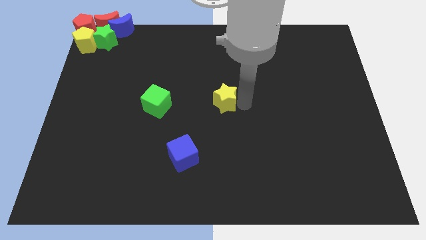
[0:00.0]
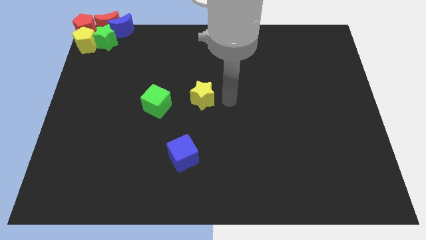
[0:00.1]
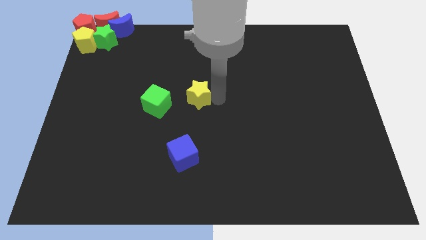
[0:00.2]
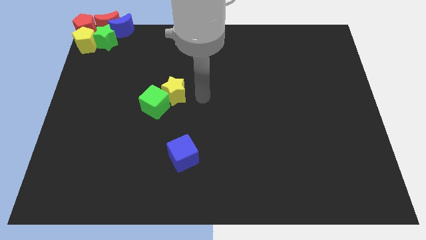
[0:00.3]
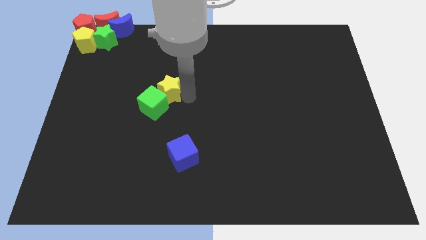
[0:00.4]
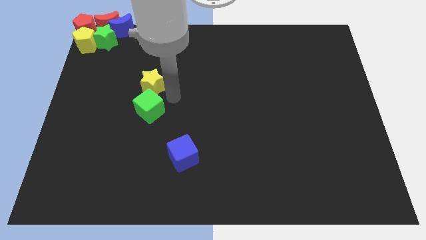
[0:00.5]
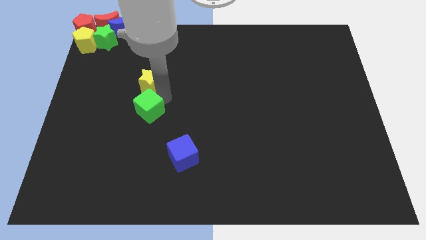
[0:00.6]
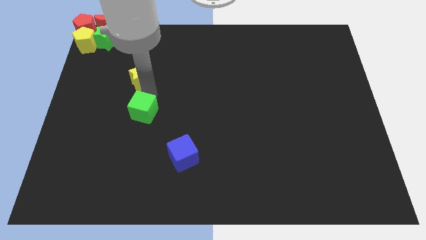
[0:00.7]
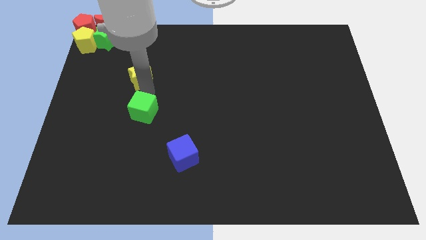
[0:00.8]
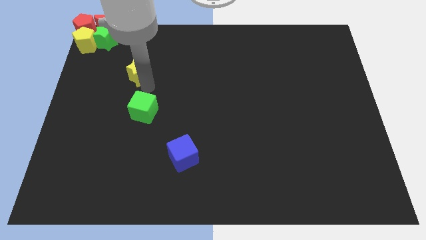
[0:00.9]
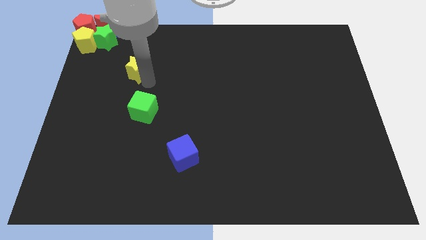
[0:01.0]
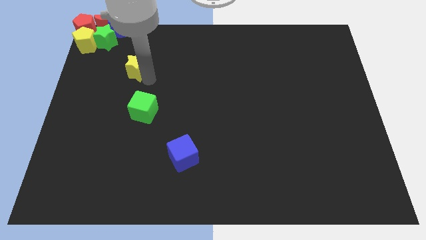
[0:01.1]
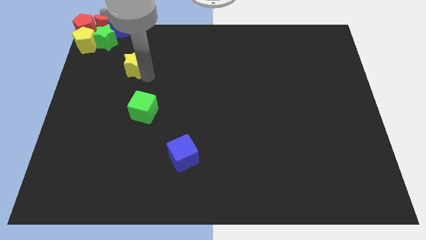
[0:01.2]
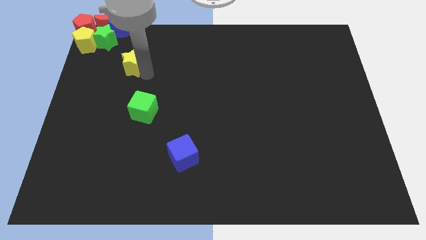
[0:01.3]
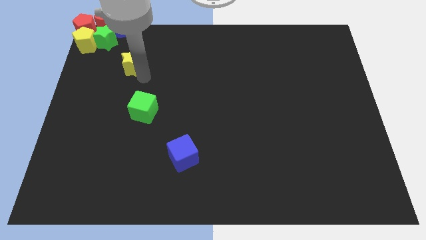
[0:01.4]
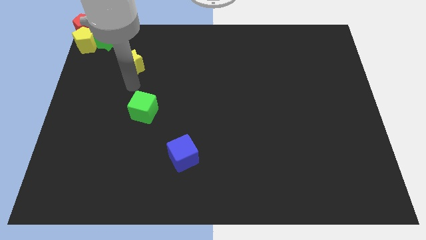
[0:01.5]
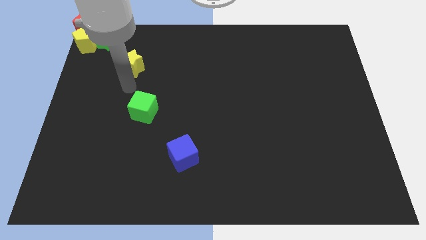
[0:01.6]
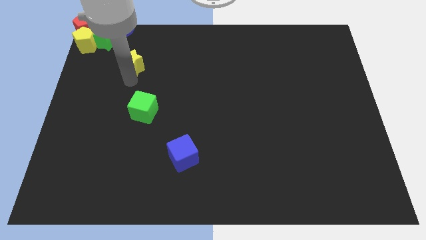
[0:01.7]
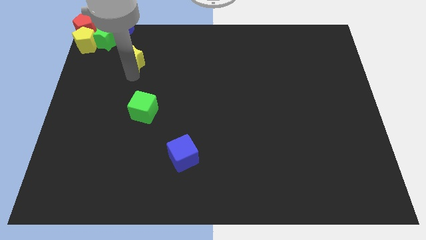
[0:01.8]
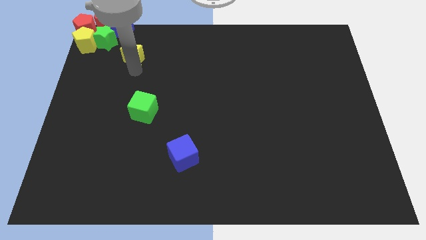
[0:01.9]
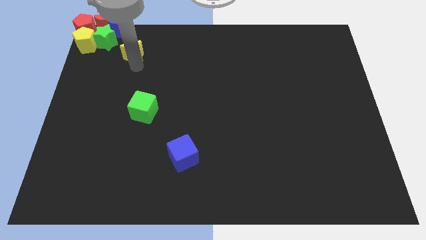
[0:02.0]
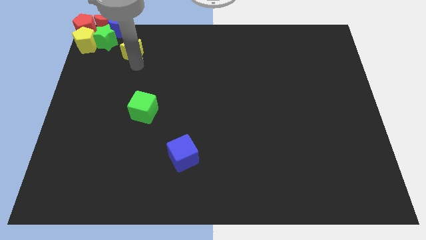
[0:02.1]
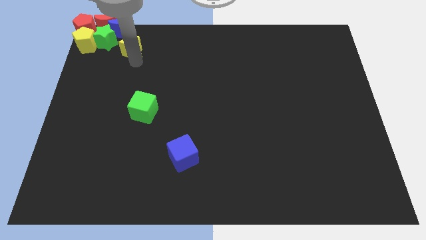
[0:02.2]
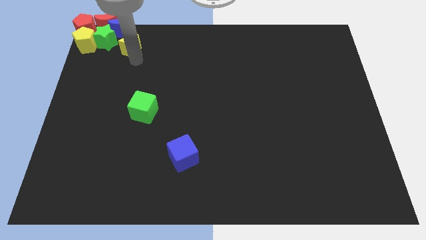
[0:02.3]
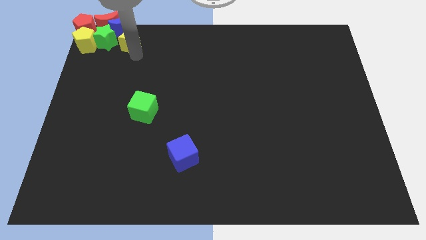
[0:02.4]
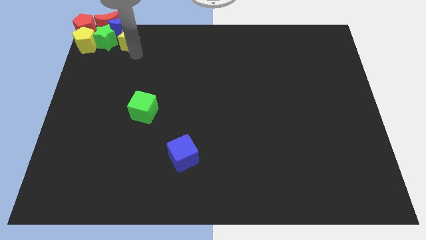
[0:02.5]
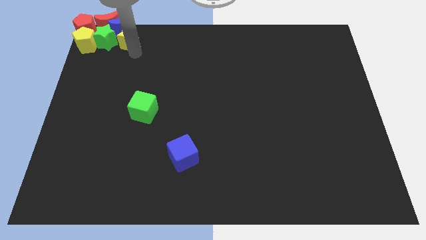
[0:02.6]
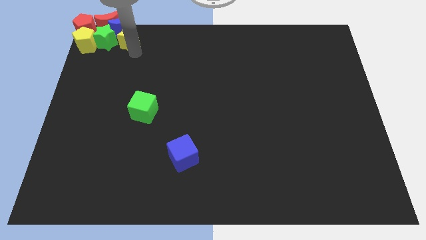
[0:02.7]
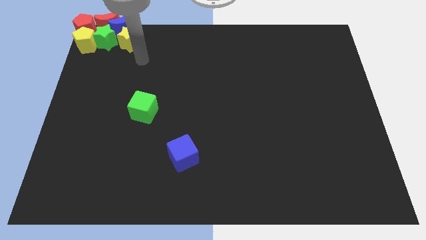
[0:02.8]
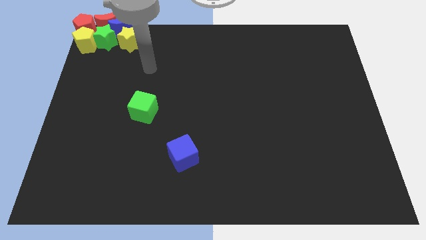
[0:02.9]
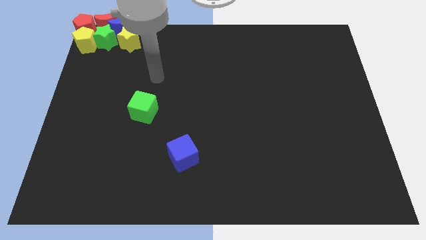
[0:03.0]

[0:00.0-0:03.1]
move the yellow star into the group of blocks

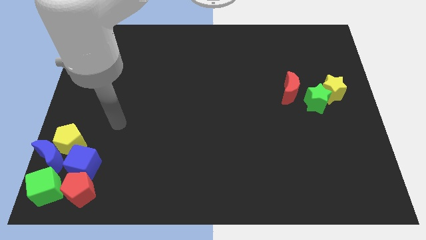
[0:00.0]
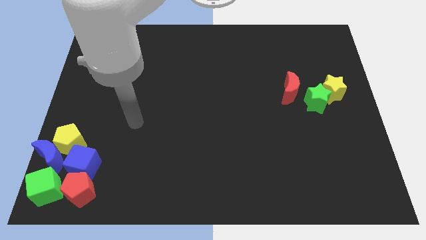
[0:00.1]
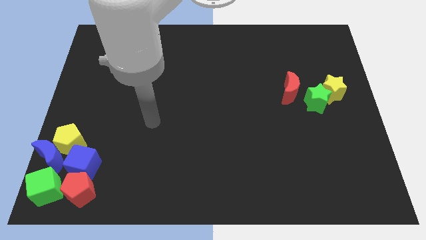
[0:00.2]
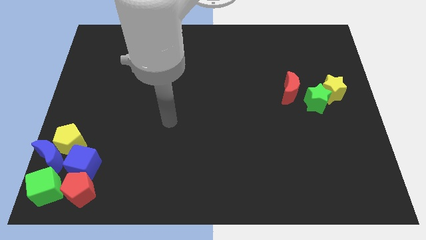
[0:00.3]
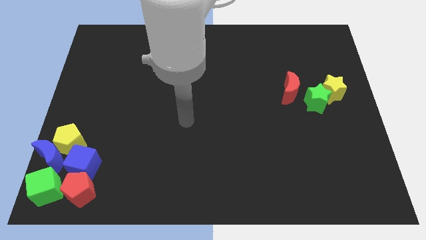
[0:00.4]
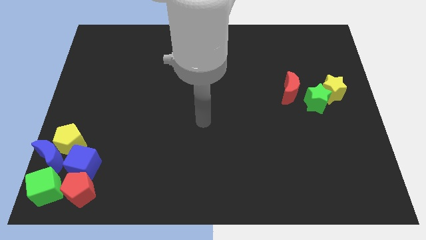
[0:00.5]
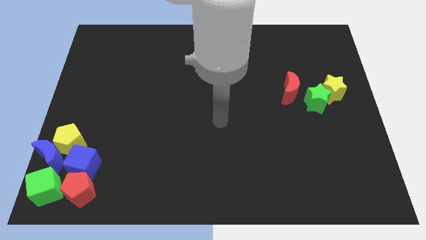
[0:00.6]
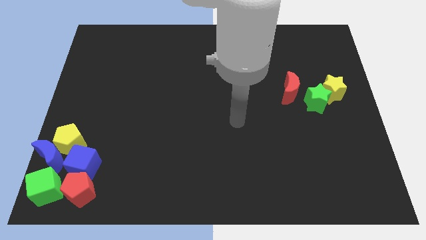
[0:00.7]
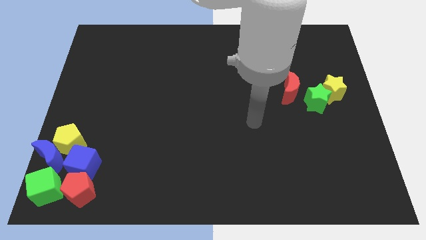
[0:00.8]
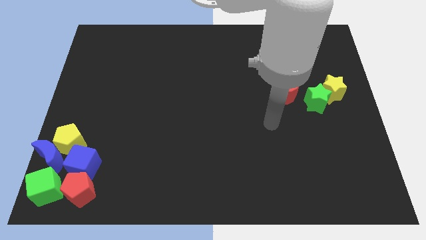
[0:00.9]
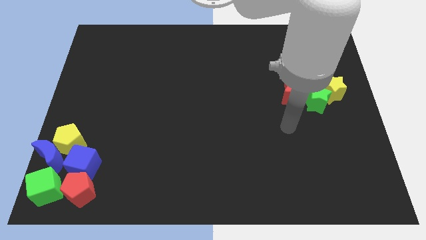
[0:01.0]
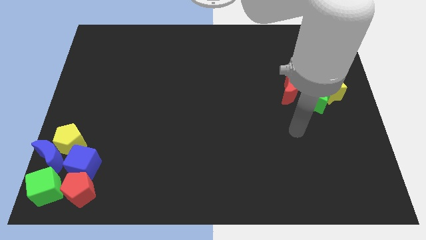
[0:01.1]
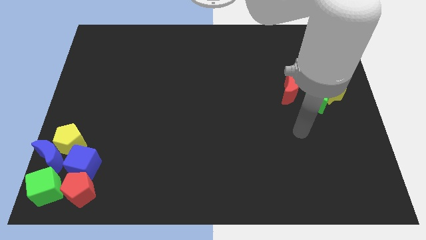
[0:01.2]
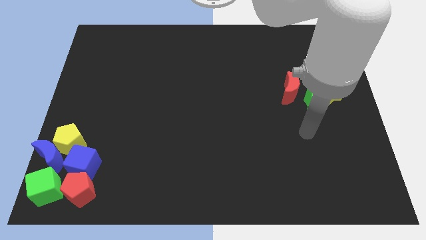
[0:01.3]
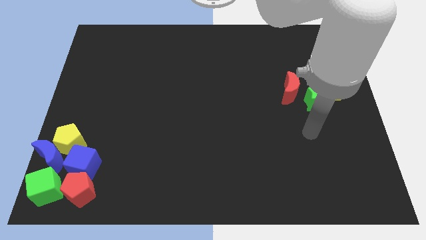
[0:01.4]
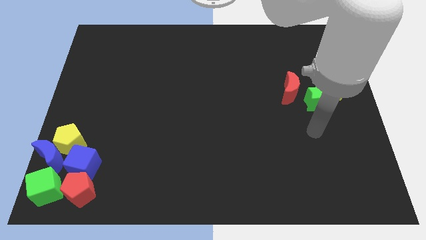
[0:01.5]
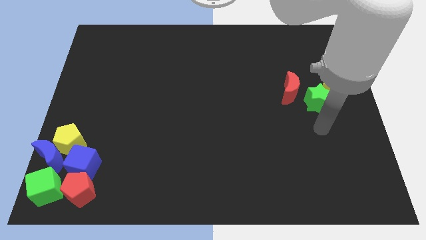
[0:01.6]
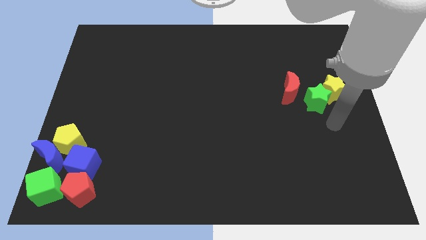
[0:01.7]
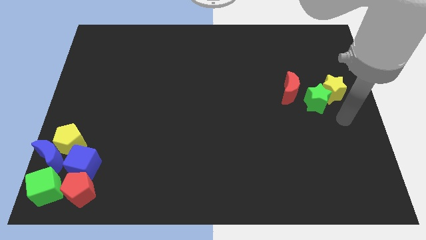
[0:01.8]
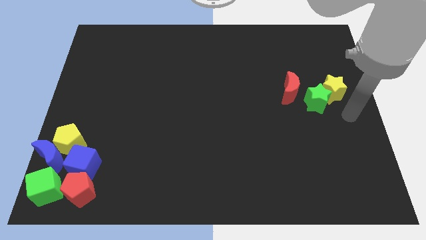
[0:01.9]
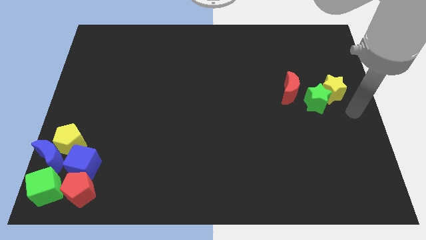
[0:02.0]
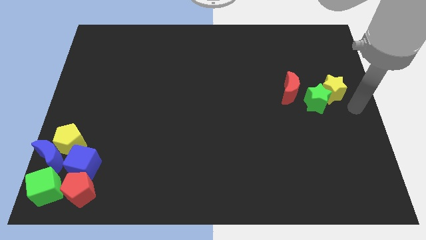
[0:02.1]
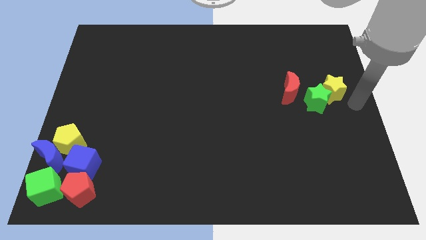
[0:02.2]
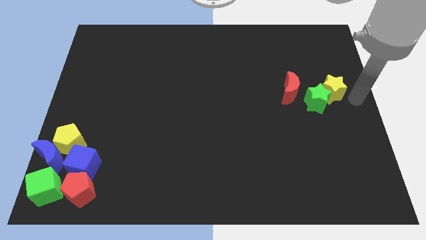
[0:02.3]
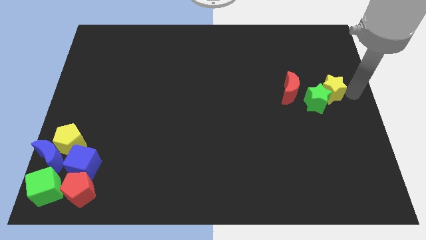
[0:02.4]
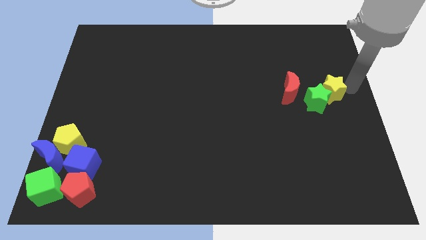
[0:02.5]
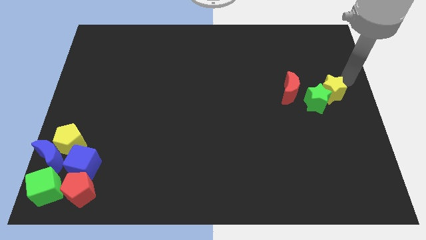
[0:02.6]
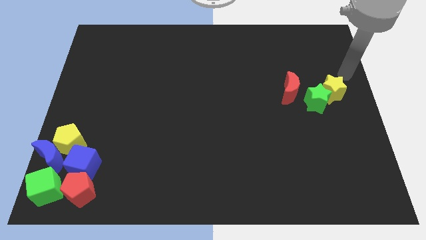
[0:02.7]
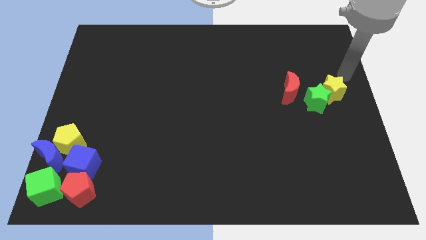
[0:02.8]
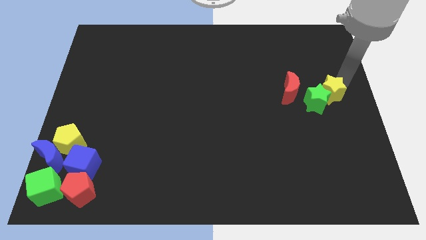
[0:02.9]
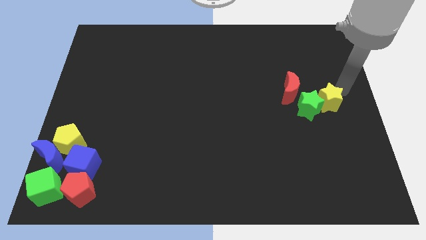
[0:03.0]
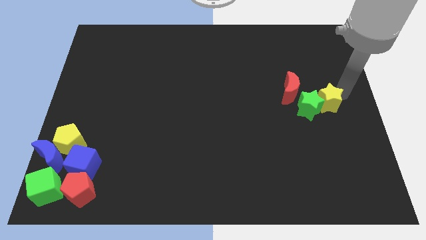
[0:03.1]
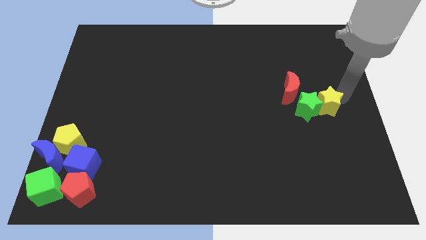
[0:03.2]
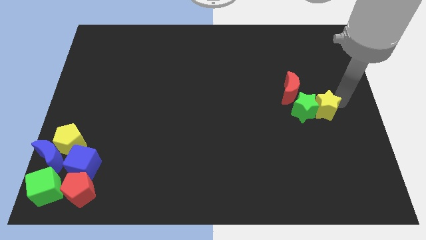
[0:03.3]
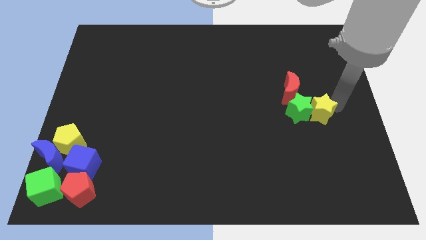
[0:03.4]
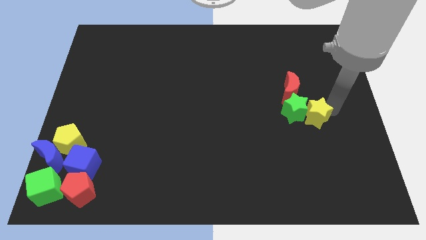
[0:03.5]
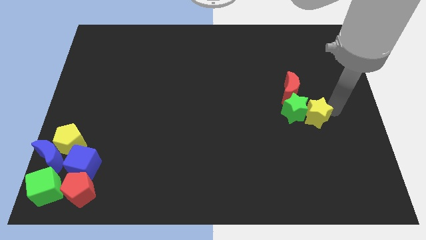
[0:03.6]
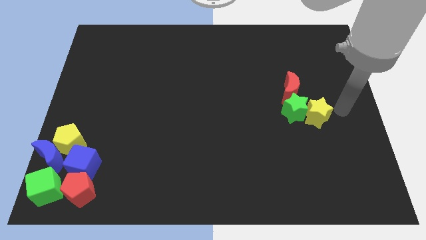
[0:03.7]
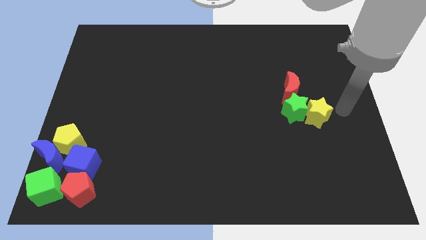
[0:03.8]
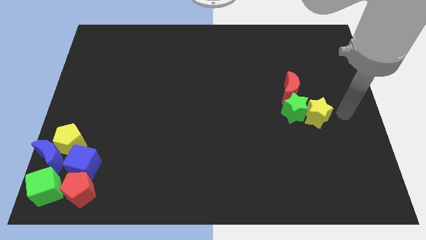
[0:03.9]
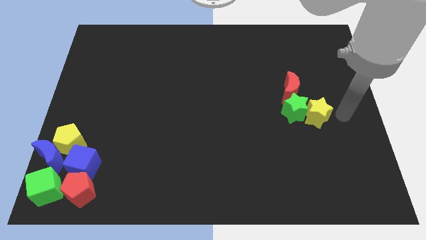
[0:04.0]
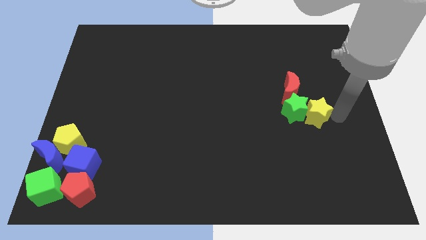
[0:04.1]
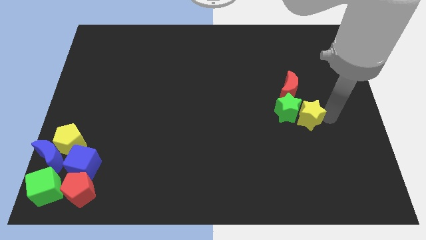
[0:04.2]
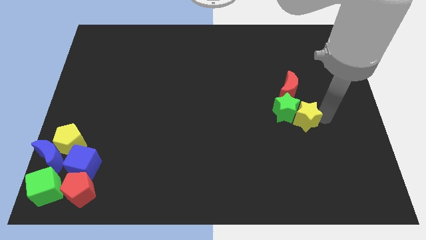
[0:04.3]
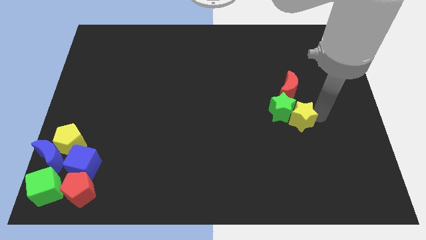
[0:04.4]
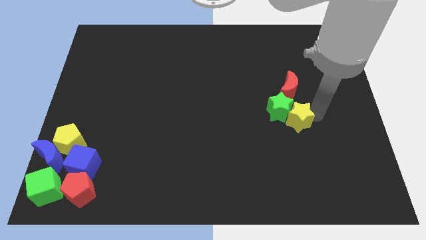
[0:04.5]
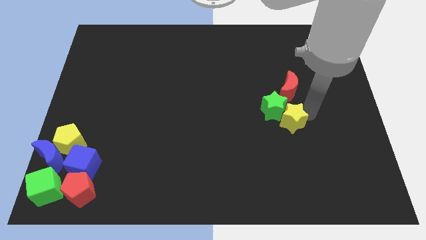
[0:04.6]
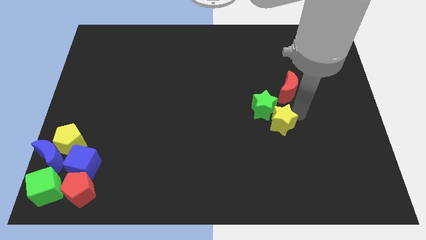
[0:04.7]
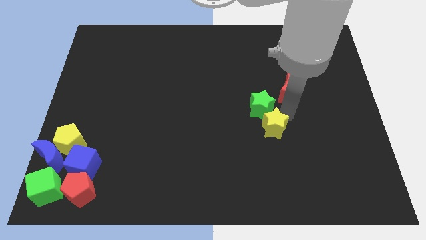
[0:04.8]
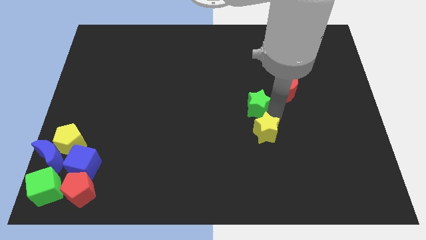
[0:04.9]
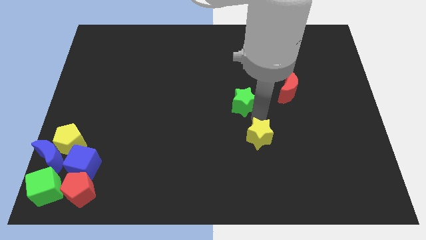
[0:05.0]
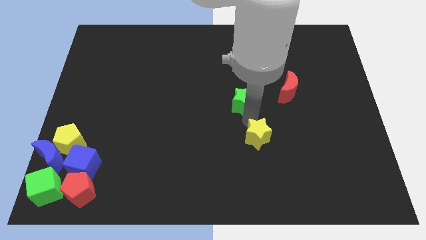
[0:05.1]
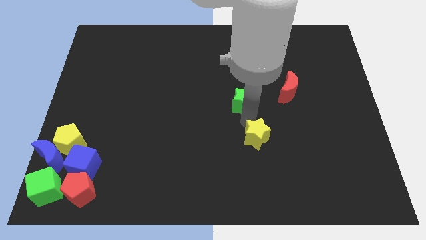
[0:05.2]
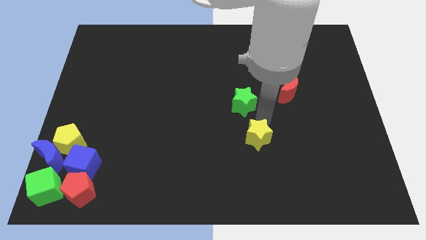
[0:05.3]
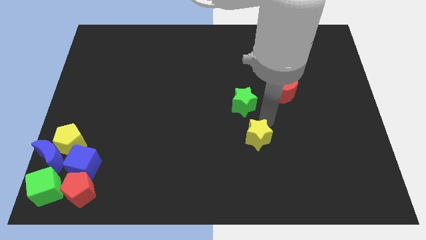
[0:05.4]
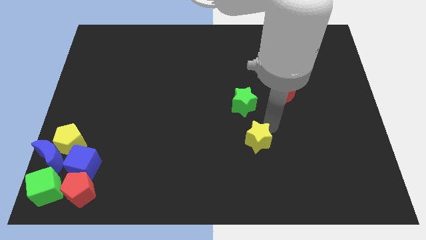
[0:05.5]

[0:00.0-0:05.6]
separate the yellow star and green star

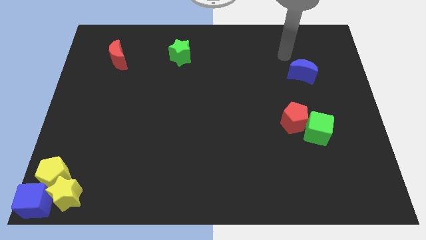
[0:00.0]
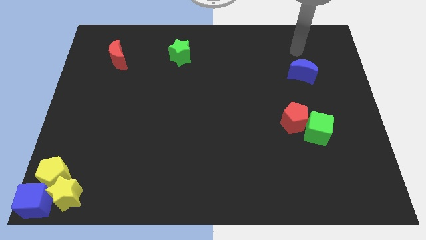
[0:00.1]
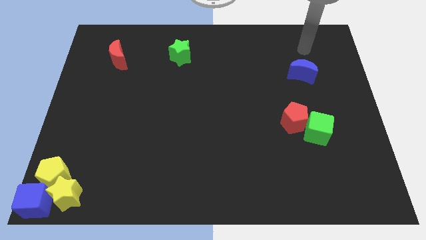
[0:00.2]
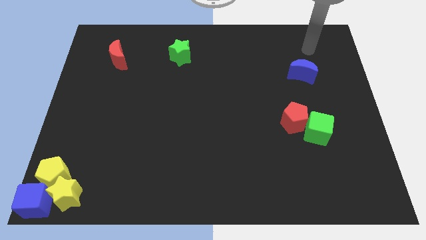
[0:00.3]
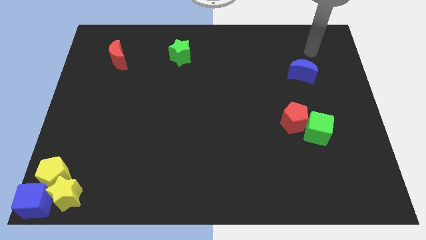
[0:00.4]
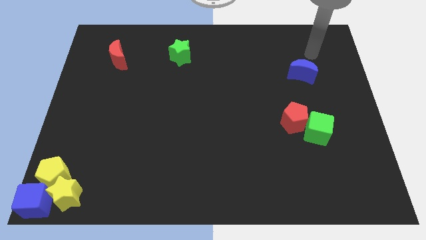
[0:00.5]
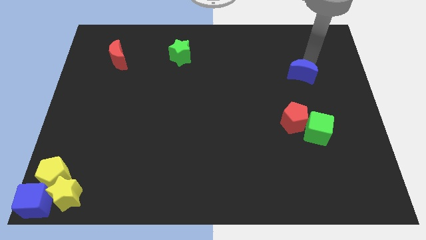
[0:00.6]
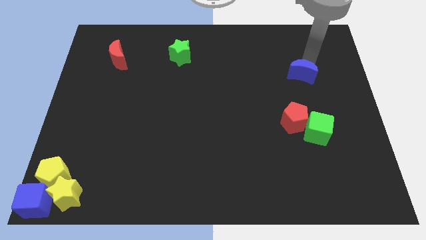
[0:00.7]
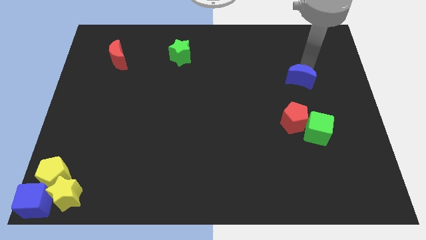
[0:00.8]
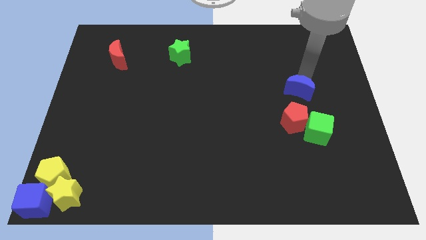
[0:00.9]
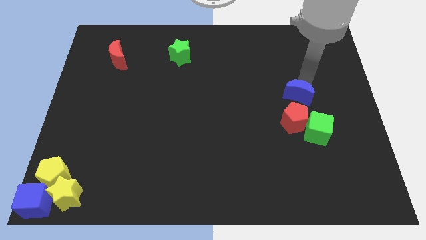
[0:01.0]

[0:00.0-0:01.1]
place the blue crescent at the top of red pentagon
